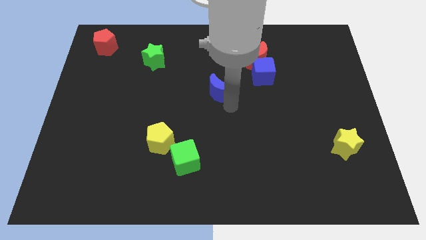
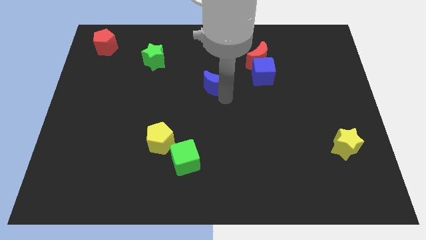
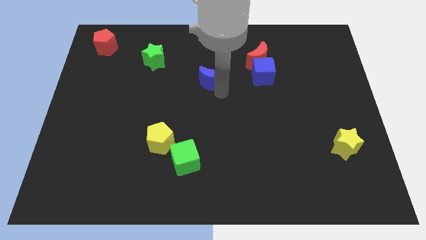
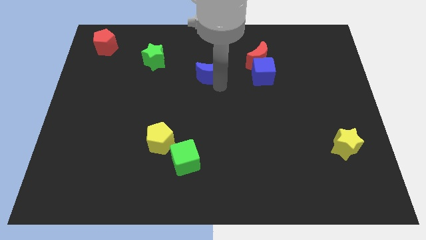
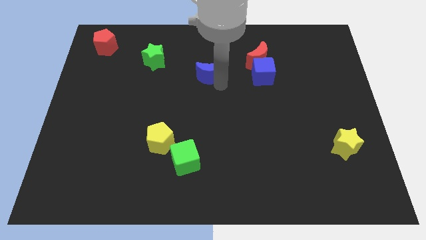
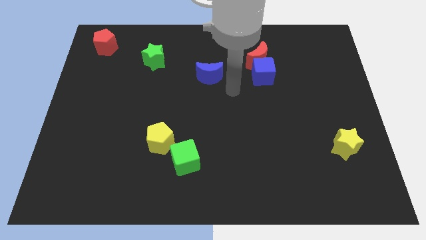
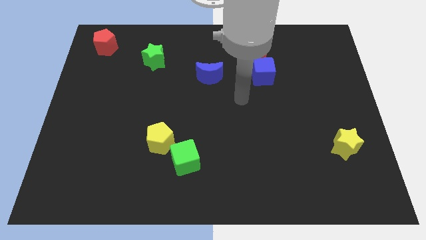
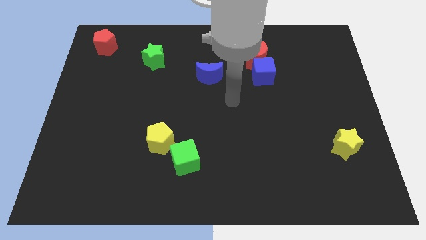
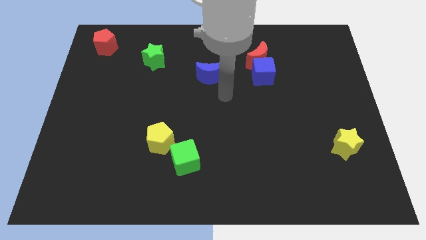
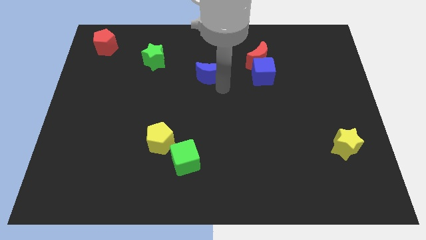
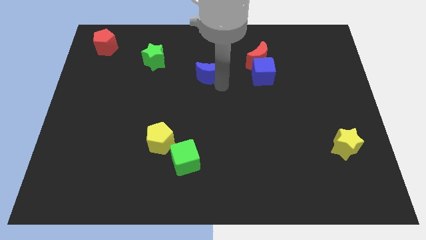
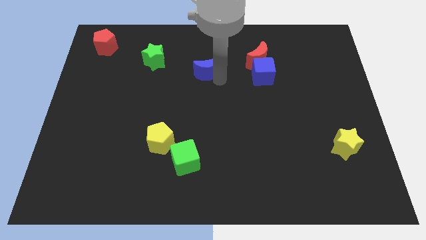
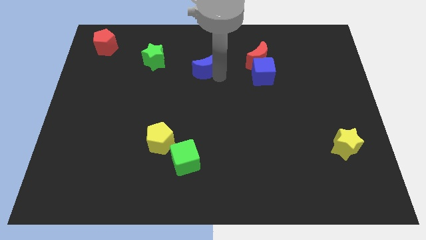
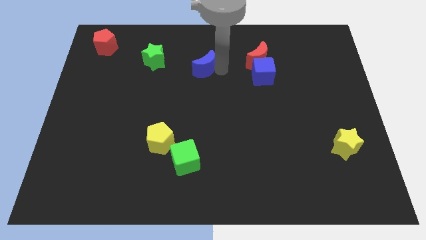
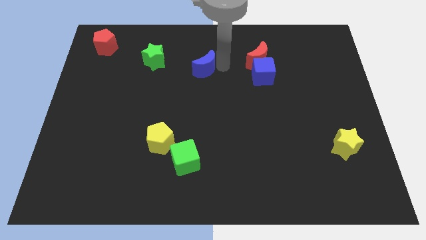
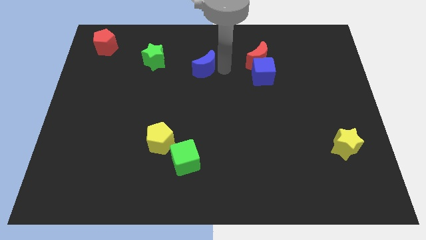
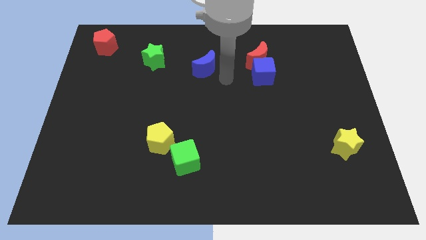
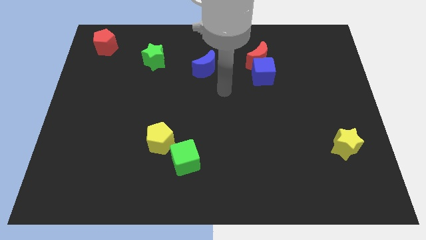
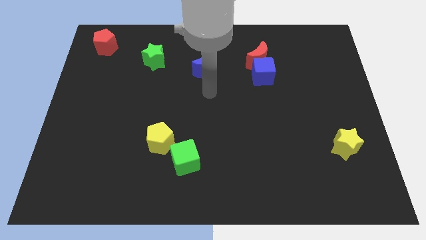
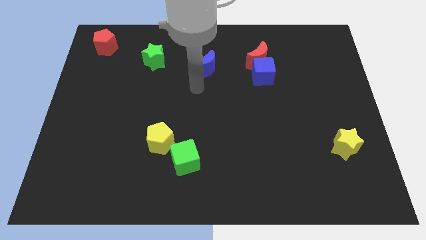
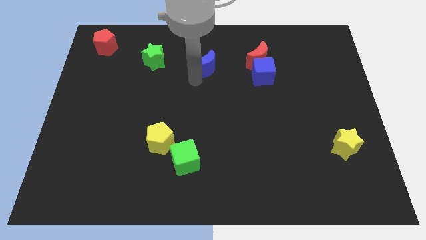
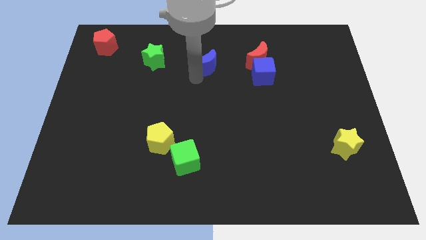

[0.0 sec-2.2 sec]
place the blue crescent in between the green star and the red crescent

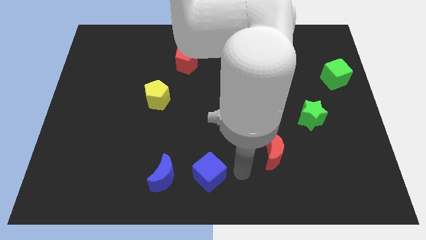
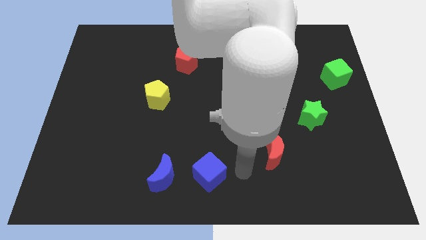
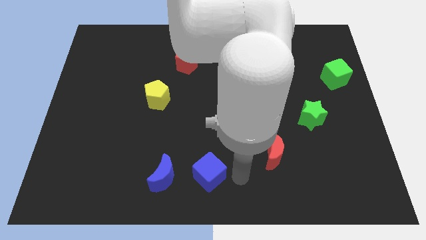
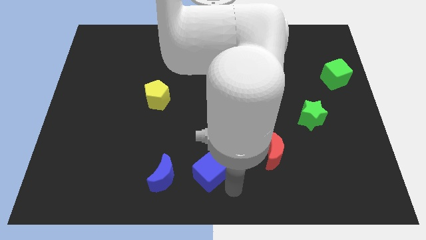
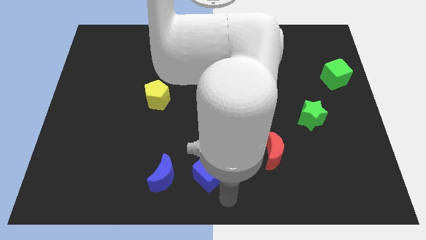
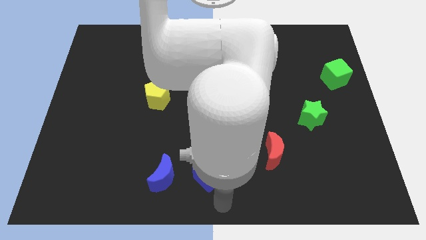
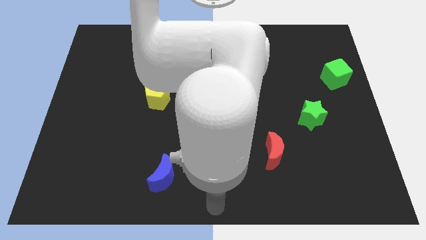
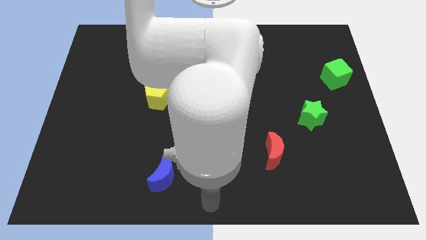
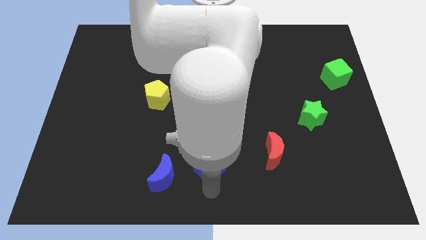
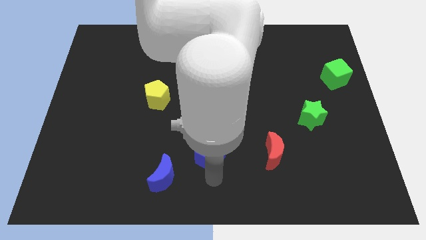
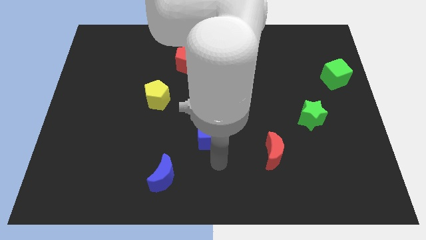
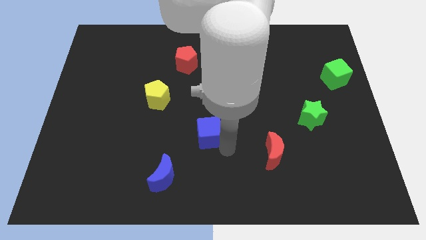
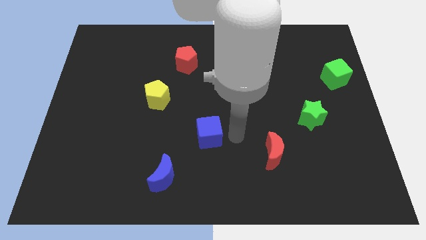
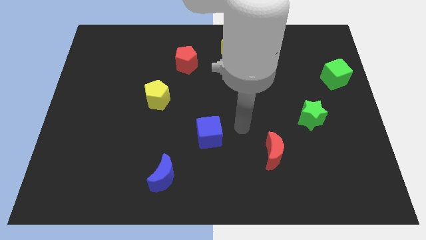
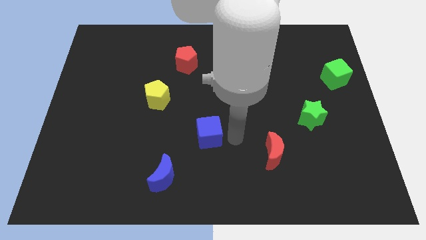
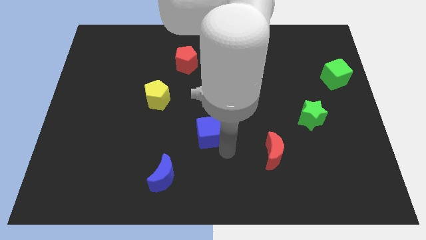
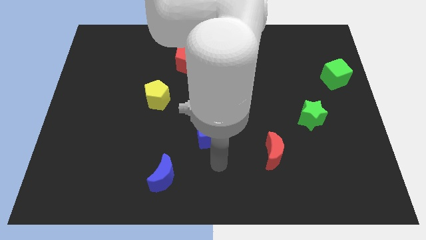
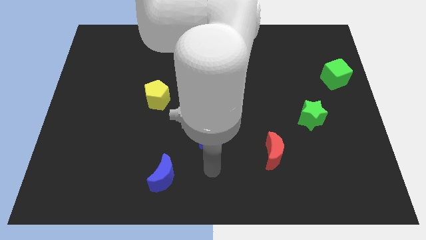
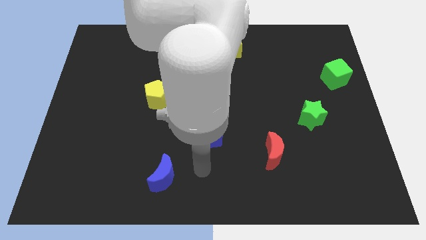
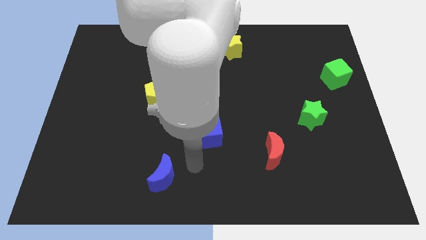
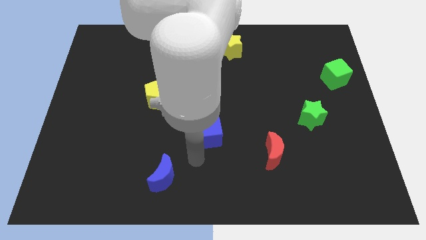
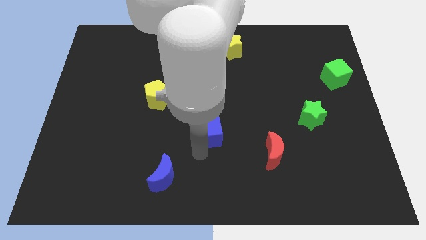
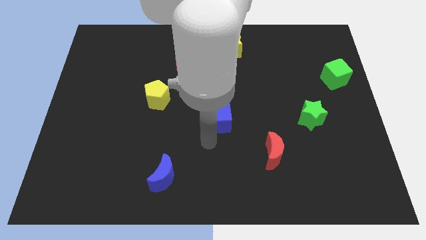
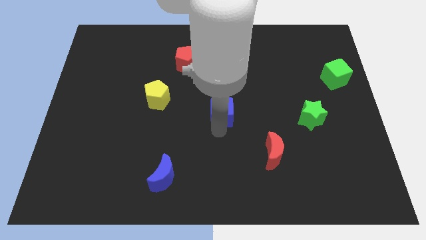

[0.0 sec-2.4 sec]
place the blue cube at the center of the board

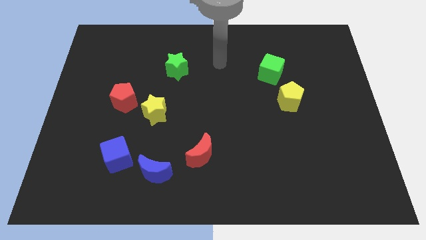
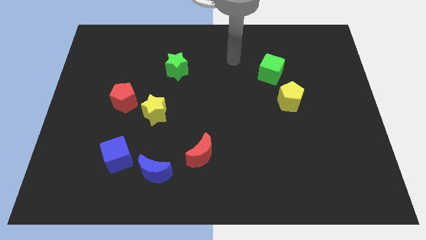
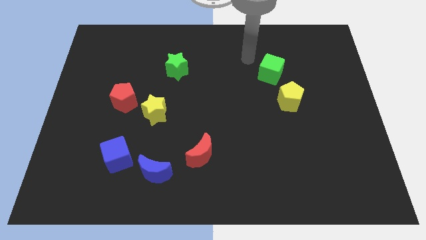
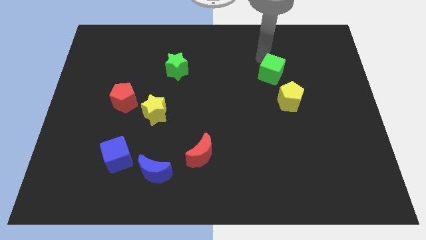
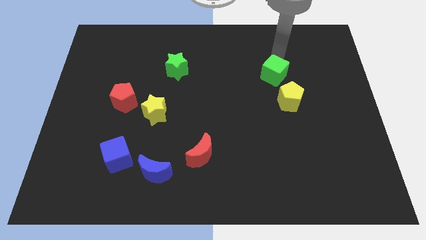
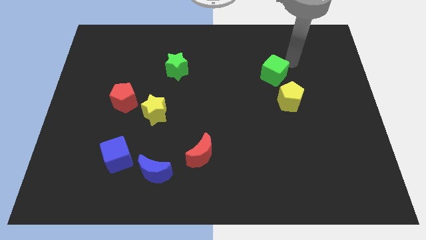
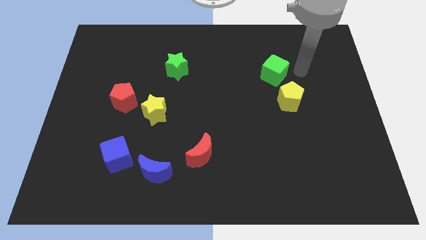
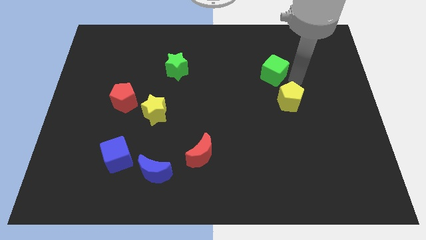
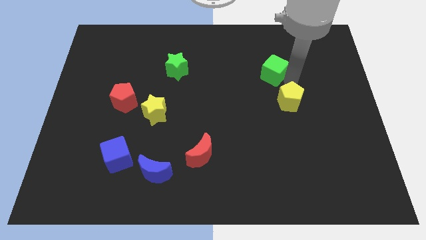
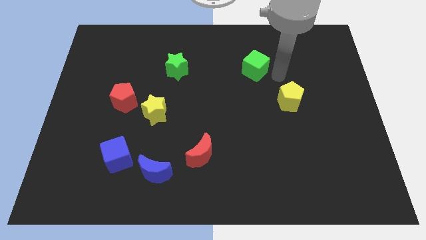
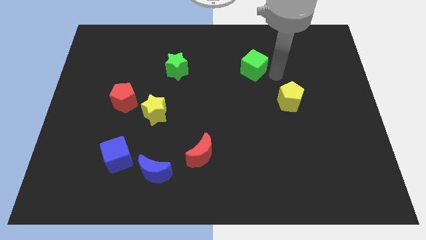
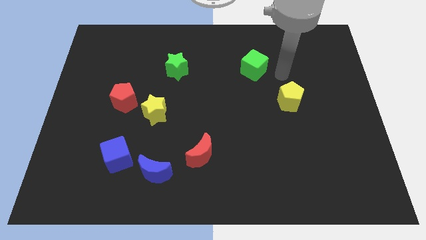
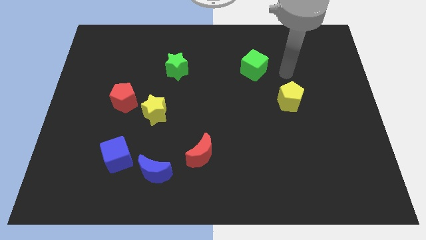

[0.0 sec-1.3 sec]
place your arm to the top left side of the yellow pentagon

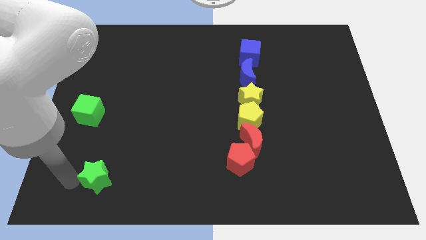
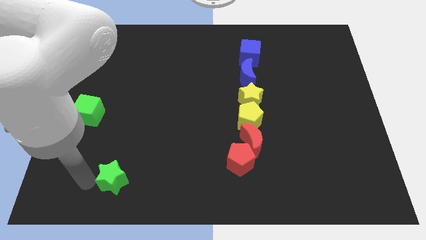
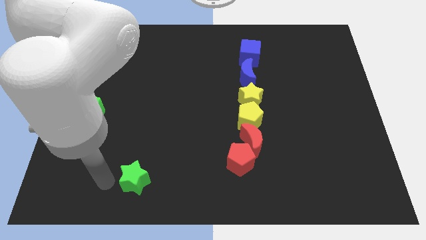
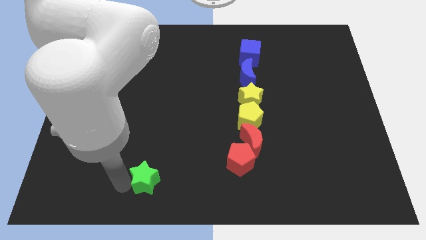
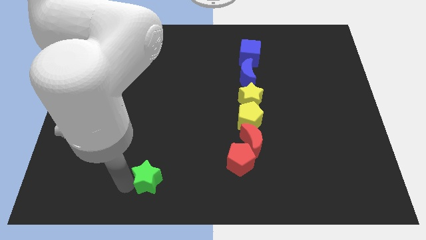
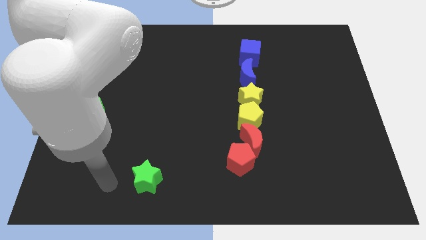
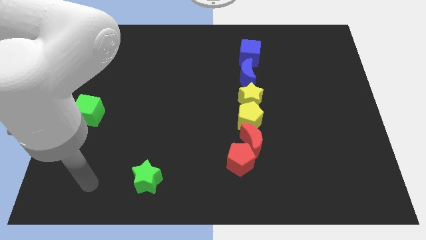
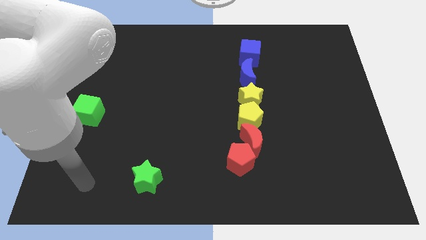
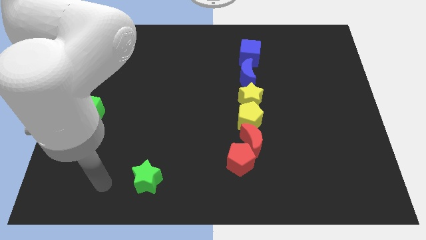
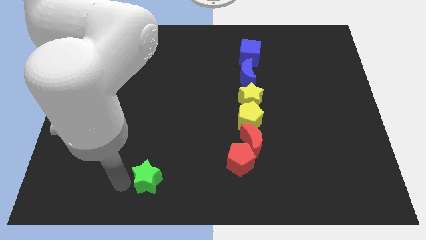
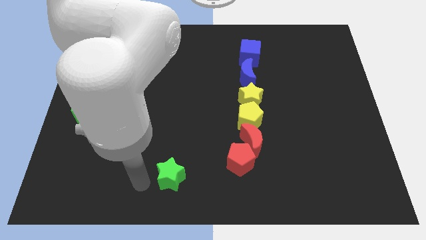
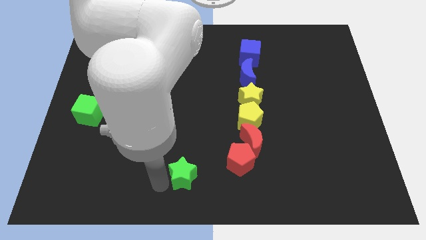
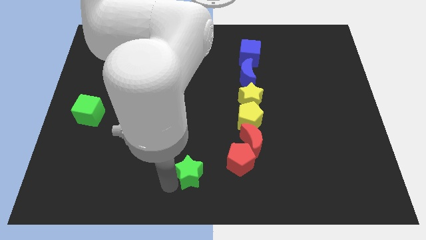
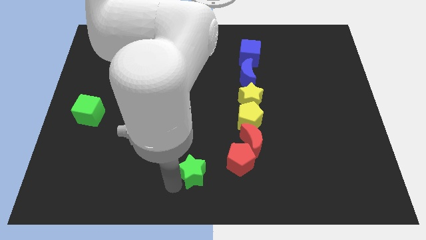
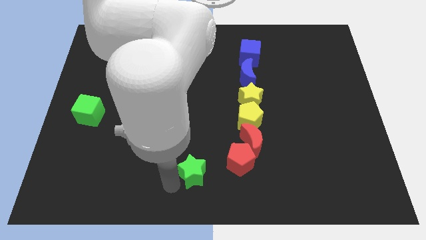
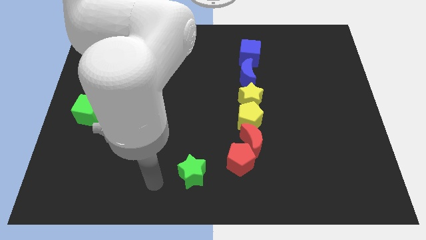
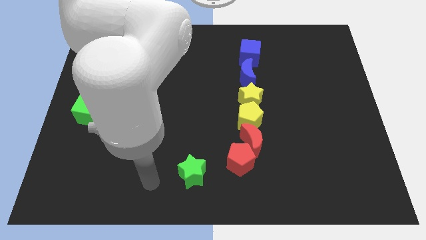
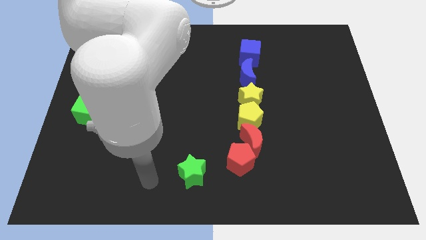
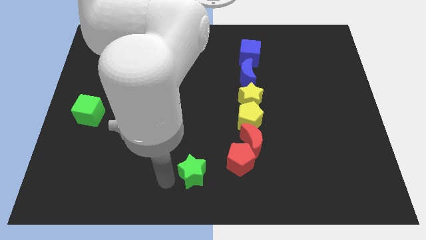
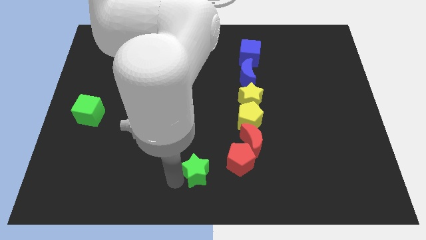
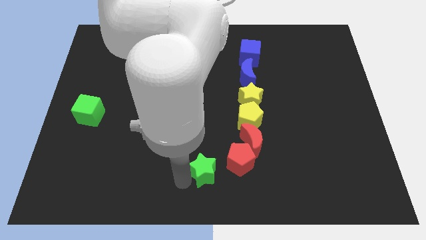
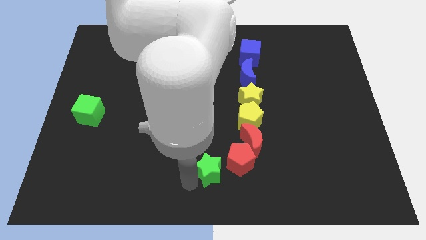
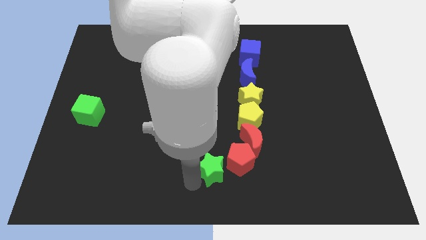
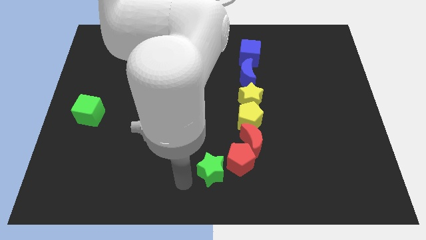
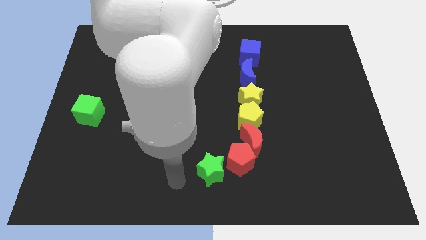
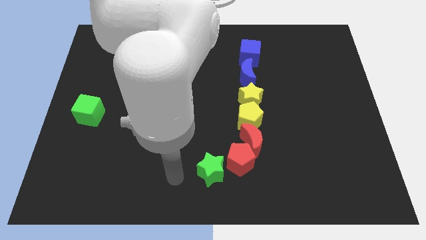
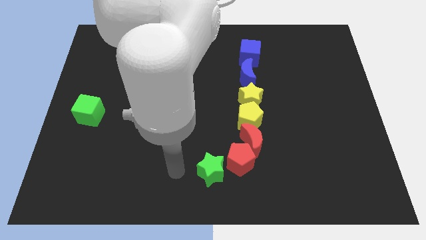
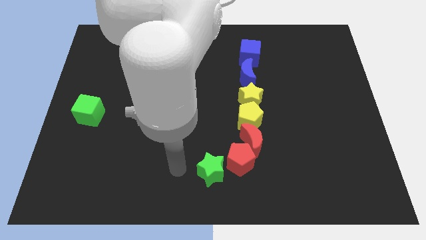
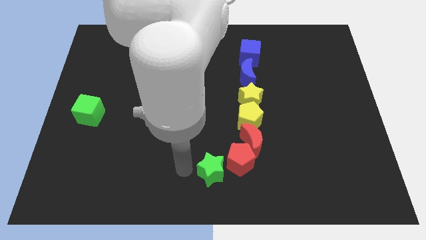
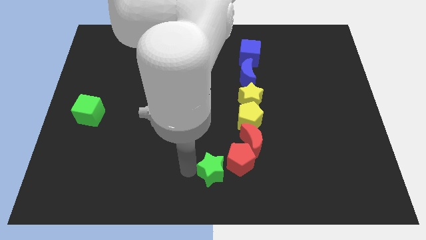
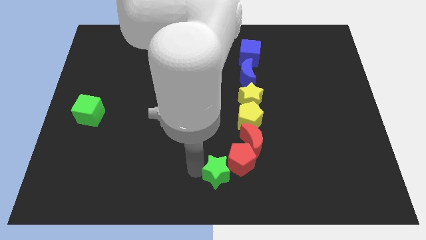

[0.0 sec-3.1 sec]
move the green star into the left side of the red pentagon

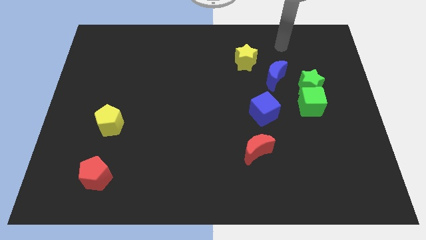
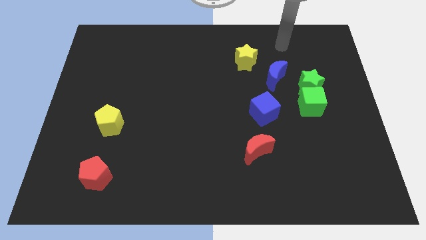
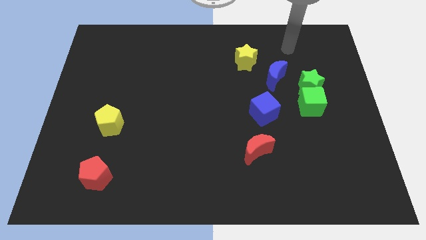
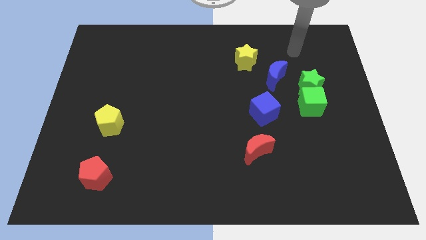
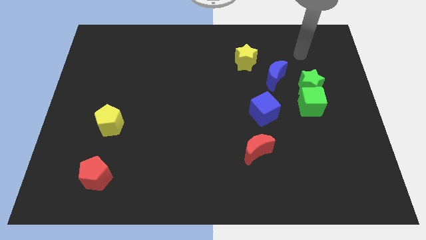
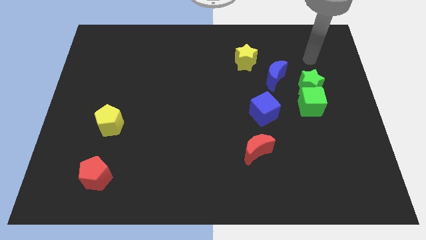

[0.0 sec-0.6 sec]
move your arm to the top of green star
